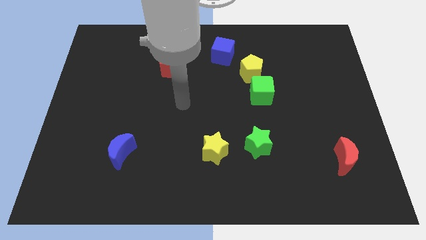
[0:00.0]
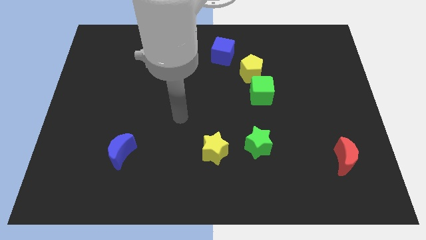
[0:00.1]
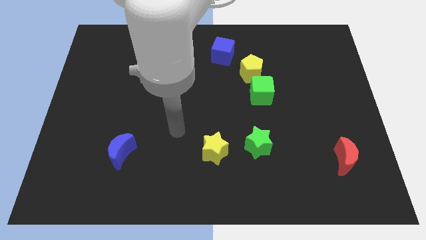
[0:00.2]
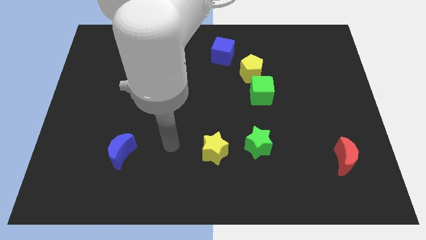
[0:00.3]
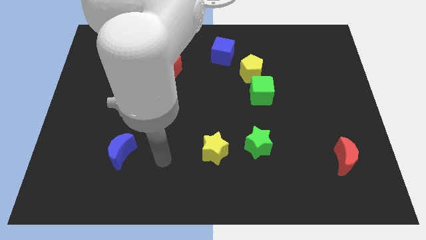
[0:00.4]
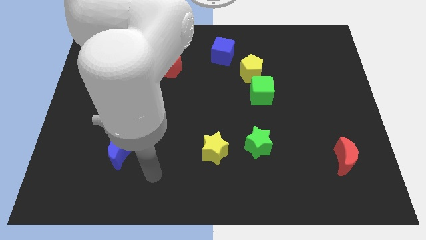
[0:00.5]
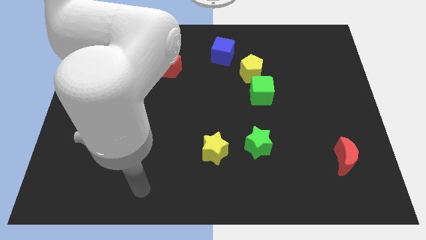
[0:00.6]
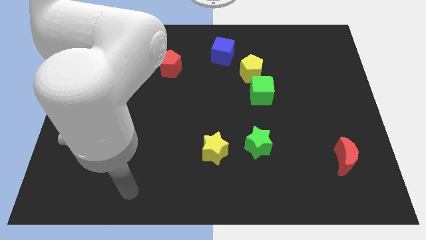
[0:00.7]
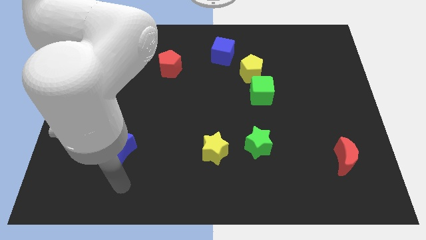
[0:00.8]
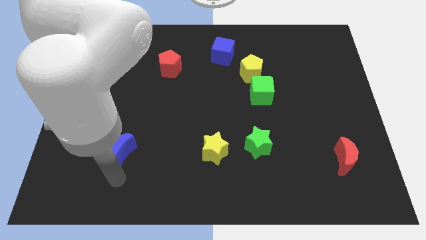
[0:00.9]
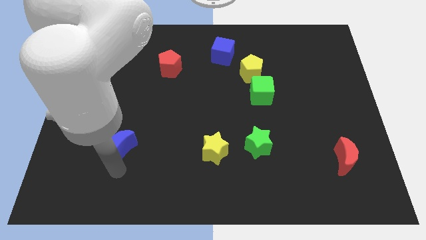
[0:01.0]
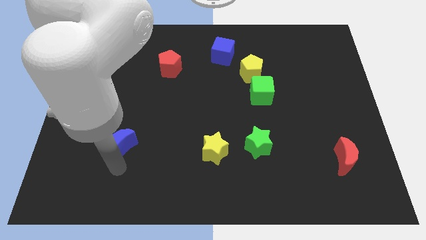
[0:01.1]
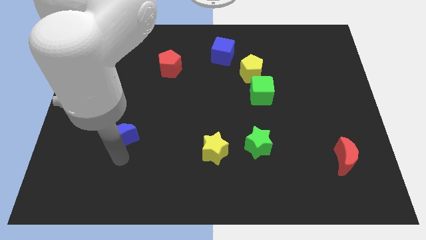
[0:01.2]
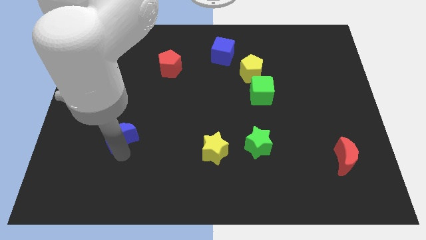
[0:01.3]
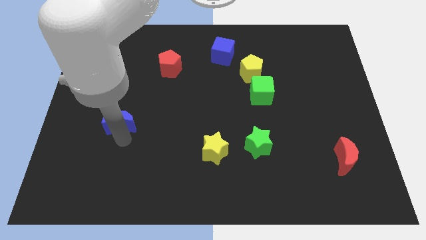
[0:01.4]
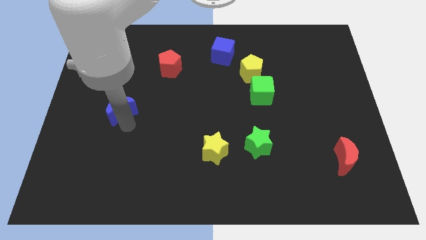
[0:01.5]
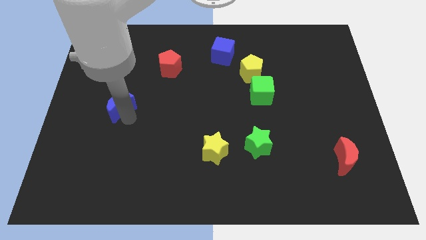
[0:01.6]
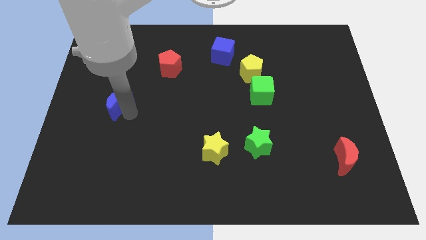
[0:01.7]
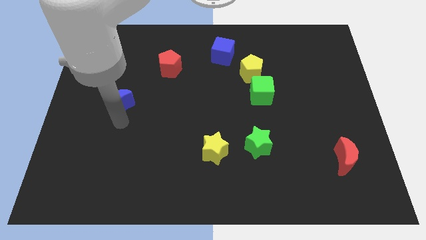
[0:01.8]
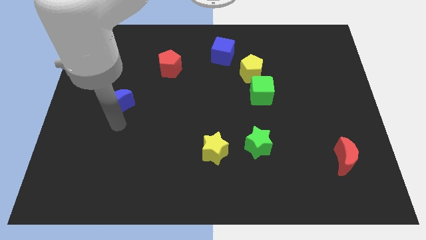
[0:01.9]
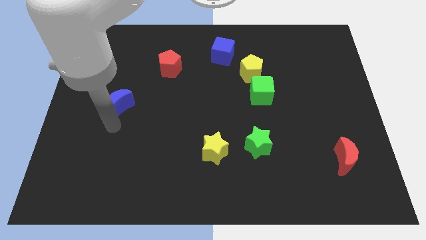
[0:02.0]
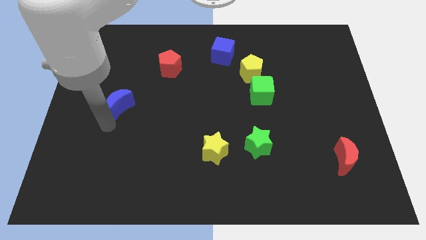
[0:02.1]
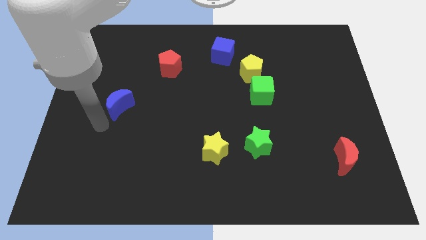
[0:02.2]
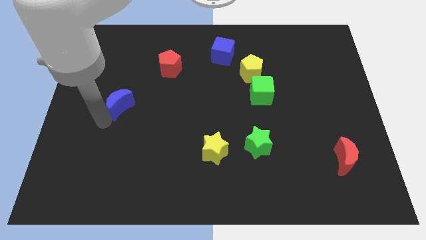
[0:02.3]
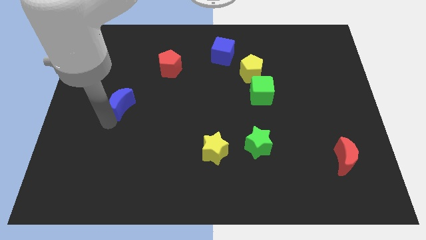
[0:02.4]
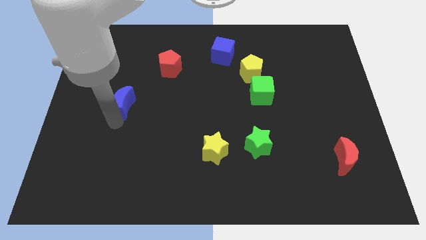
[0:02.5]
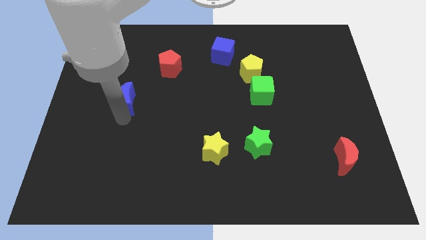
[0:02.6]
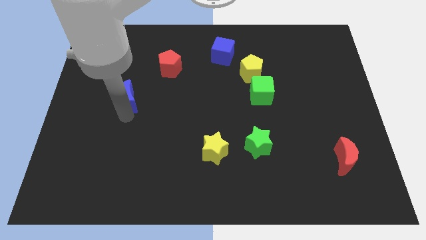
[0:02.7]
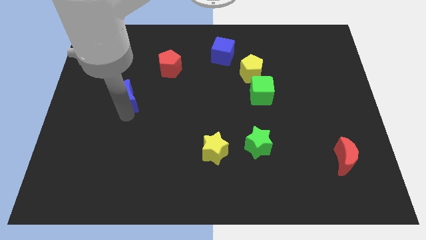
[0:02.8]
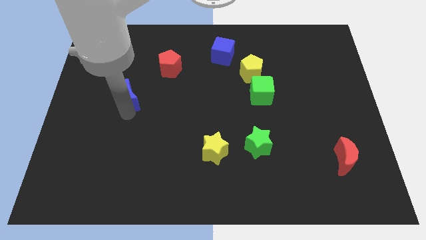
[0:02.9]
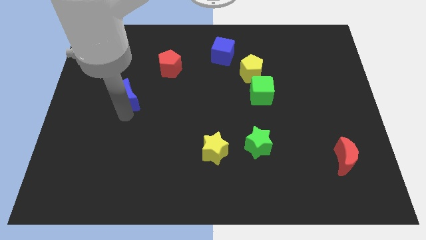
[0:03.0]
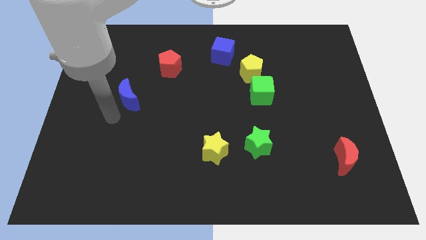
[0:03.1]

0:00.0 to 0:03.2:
slide the blue cube diagonally to yellow star

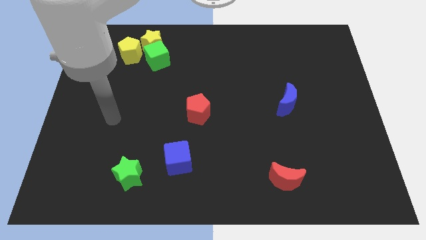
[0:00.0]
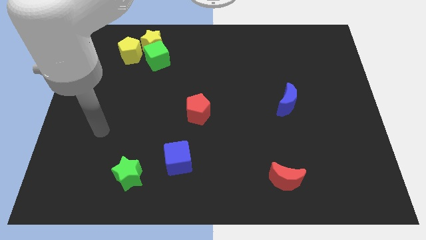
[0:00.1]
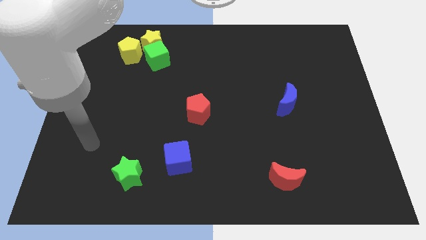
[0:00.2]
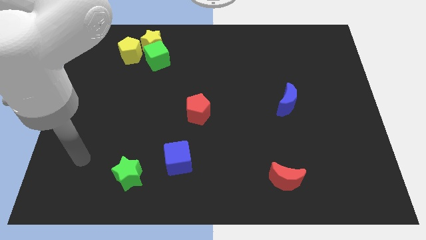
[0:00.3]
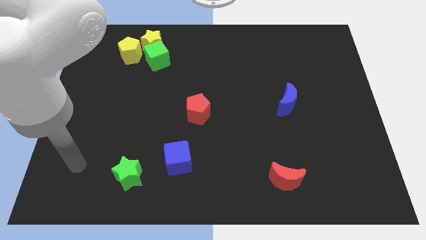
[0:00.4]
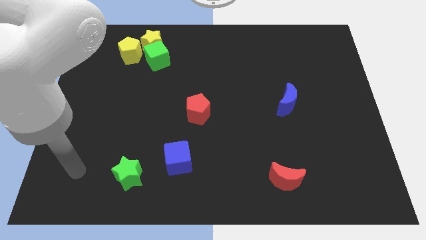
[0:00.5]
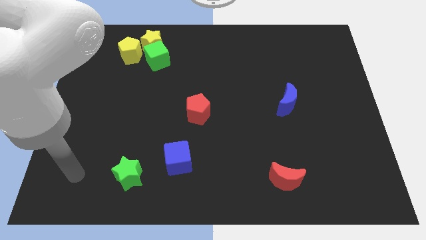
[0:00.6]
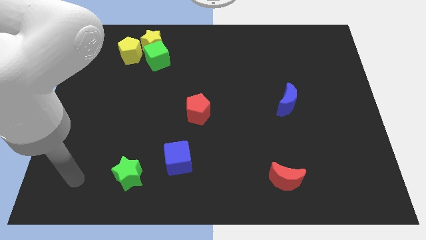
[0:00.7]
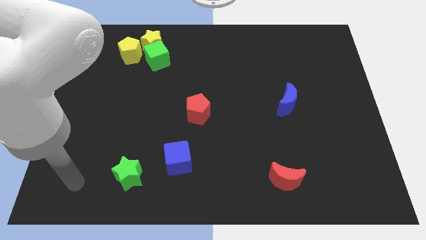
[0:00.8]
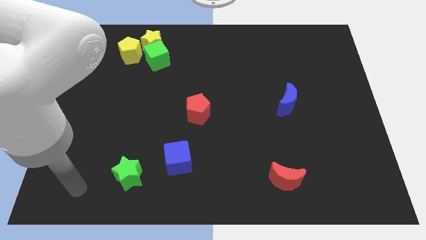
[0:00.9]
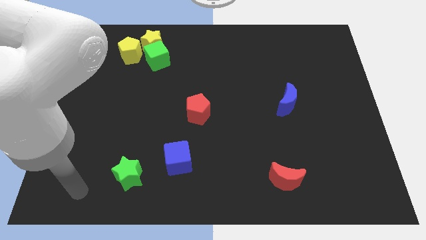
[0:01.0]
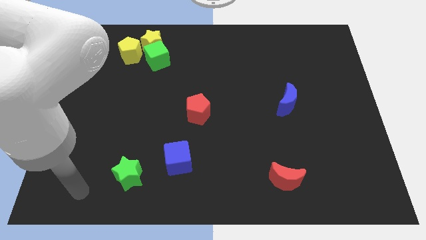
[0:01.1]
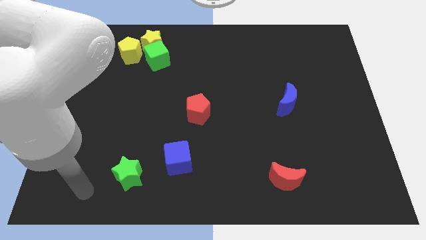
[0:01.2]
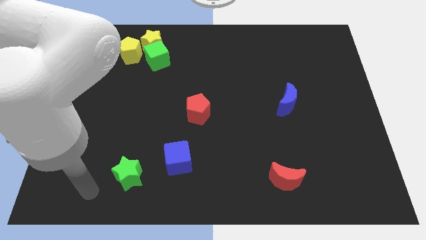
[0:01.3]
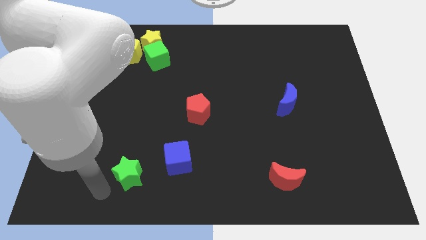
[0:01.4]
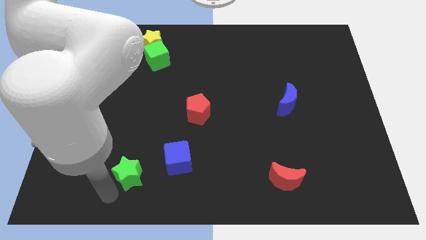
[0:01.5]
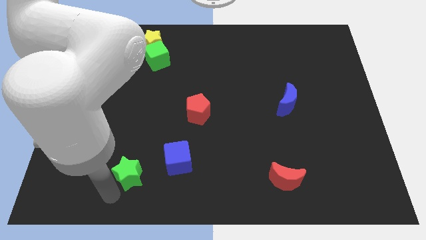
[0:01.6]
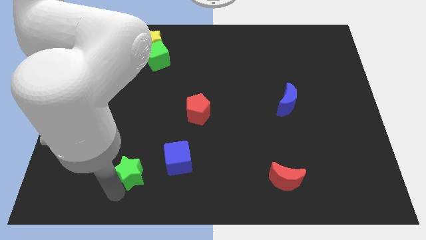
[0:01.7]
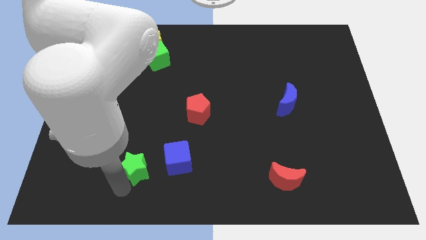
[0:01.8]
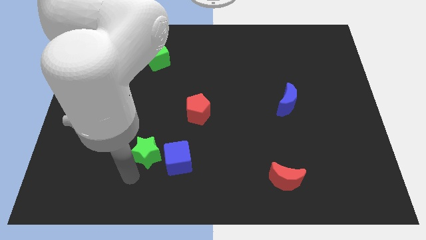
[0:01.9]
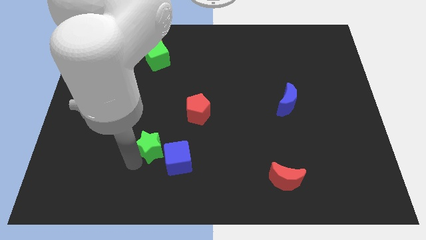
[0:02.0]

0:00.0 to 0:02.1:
slide the green star to the top left side of the blue cube

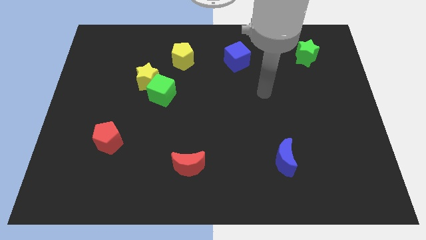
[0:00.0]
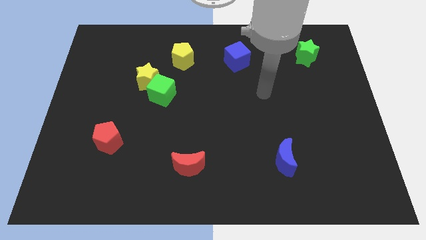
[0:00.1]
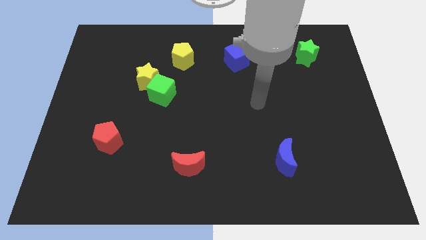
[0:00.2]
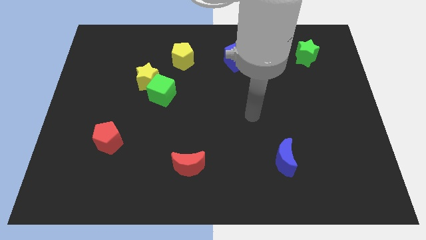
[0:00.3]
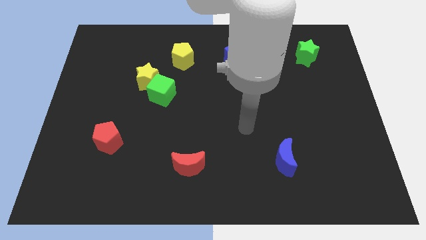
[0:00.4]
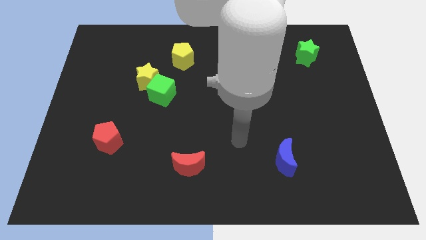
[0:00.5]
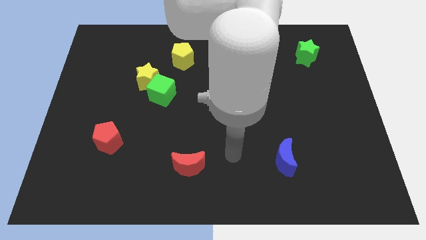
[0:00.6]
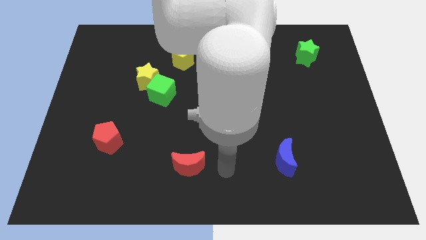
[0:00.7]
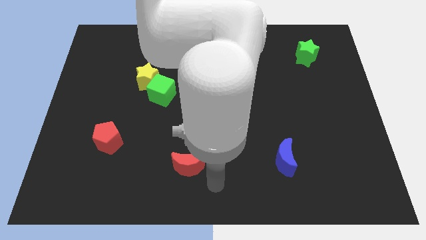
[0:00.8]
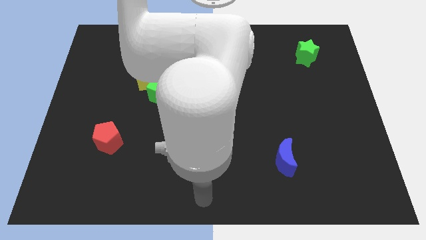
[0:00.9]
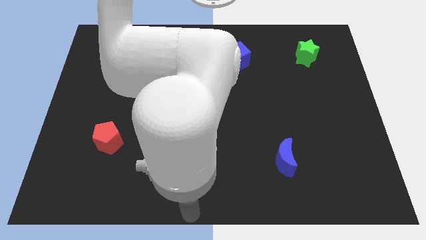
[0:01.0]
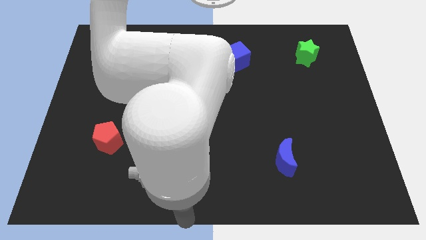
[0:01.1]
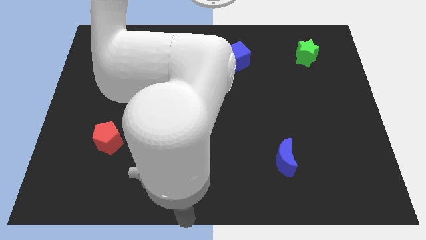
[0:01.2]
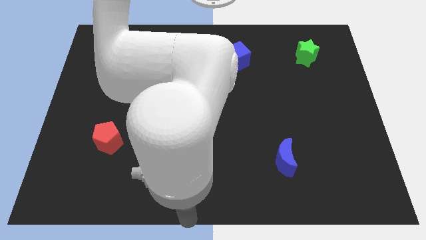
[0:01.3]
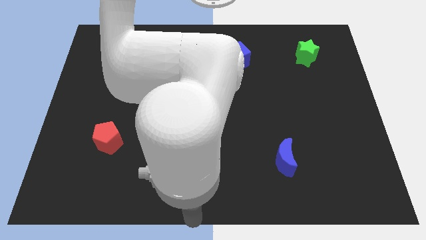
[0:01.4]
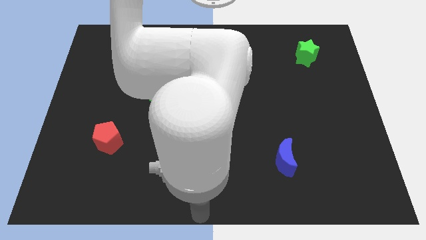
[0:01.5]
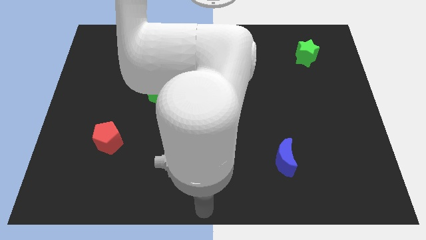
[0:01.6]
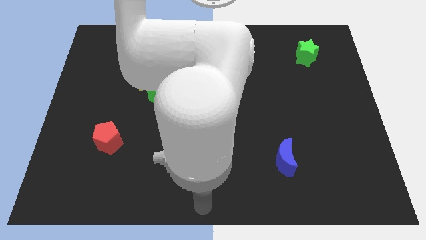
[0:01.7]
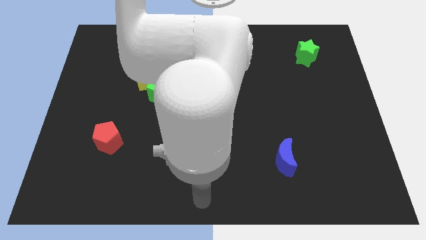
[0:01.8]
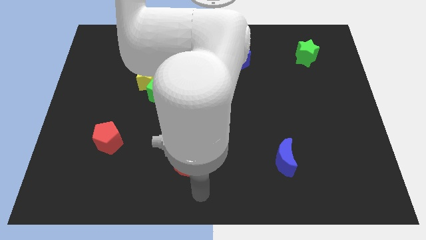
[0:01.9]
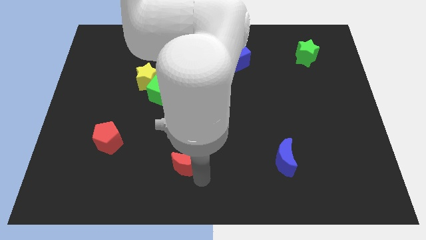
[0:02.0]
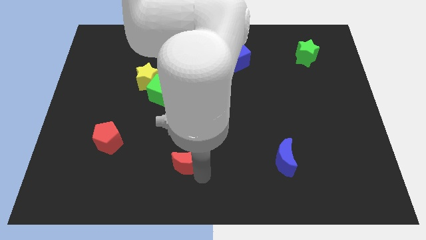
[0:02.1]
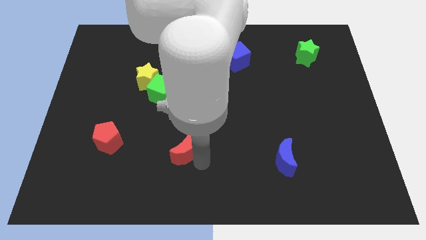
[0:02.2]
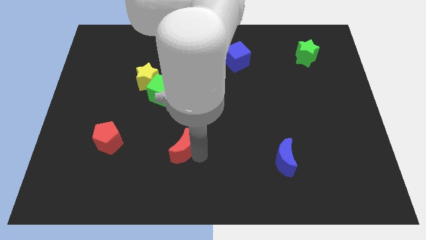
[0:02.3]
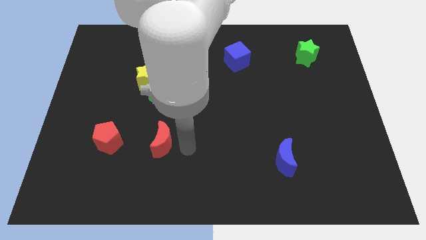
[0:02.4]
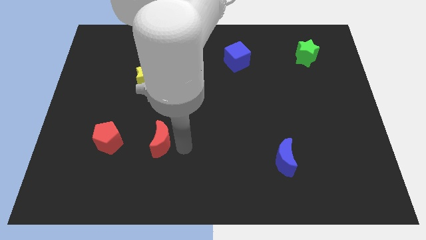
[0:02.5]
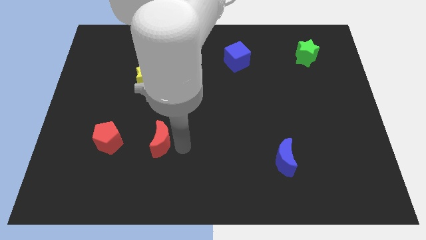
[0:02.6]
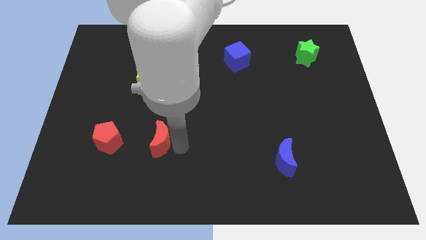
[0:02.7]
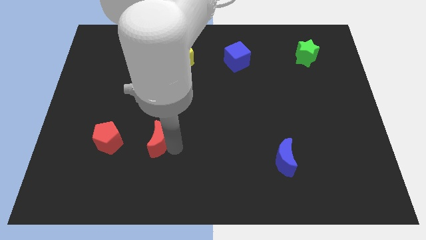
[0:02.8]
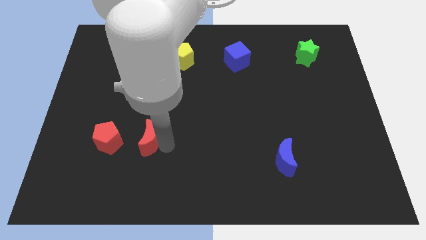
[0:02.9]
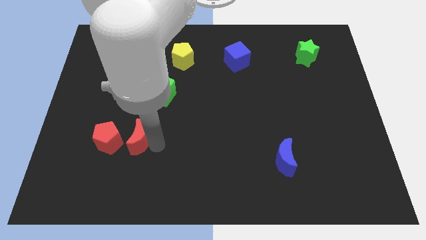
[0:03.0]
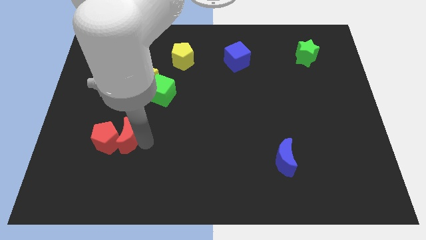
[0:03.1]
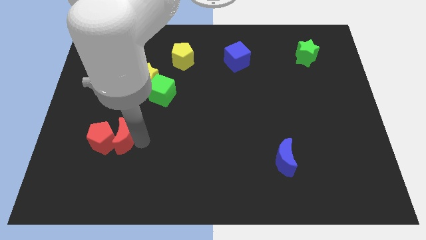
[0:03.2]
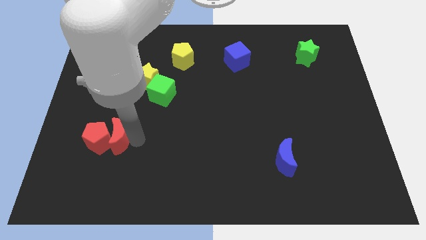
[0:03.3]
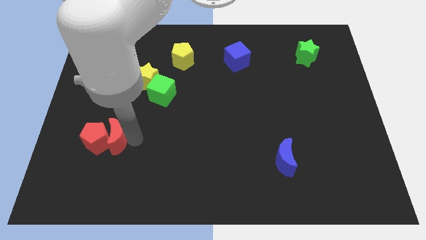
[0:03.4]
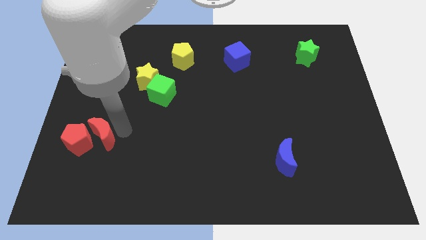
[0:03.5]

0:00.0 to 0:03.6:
move the red crecent into red pentagon
